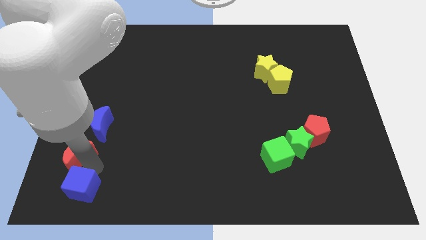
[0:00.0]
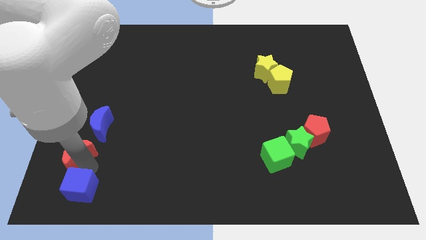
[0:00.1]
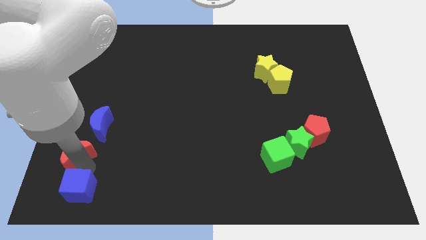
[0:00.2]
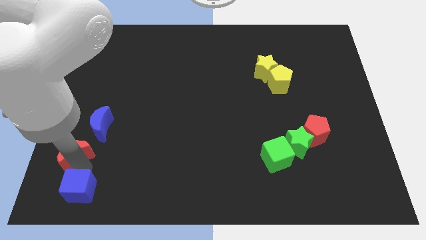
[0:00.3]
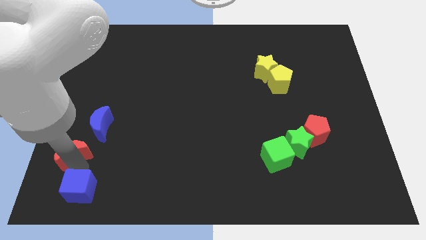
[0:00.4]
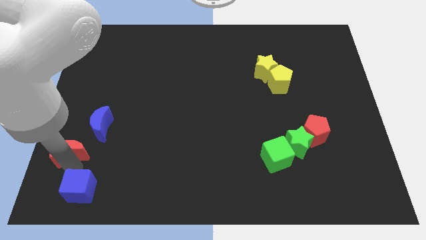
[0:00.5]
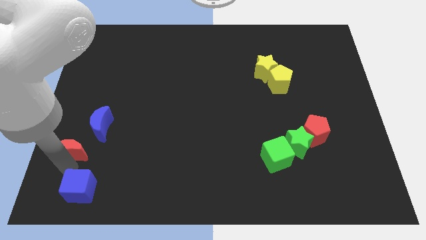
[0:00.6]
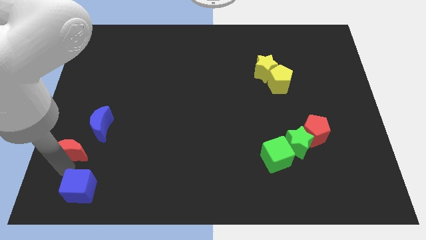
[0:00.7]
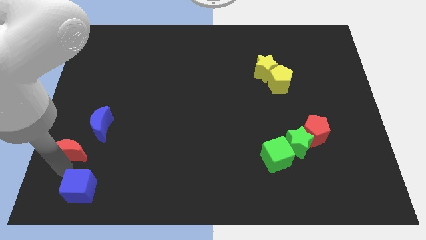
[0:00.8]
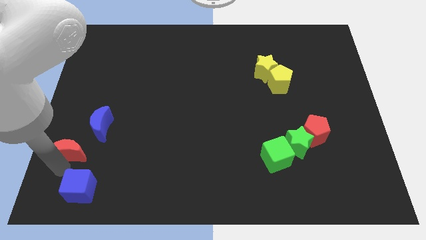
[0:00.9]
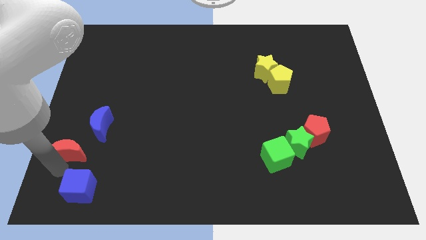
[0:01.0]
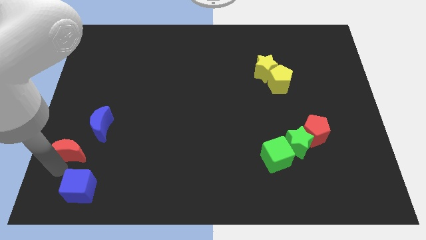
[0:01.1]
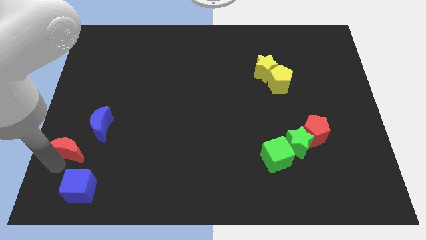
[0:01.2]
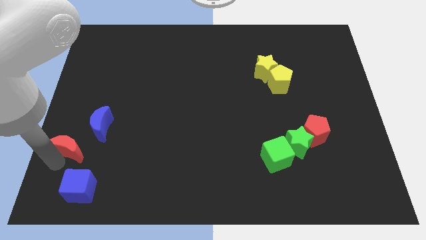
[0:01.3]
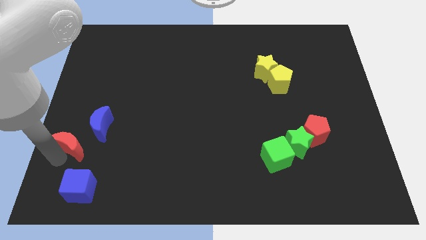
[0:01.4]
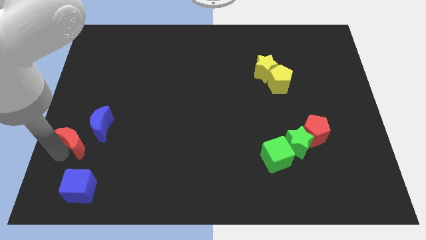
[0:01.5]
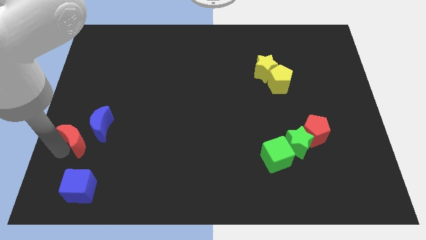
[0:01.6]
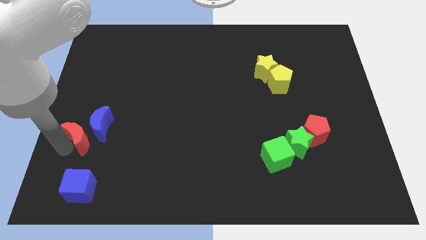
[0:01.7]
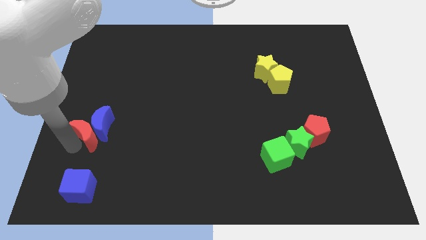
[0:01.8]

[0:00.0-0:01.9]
separate the red crescent from blue cube

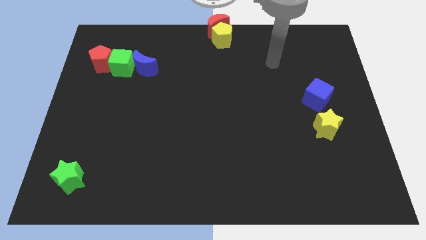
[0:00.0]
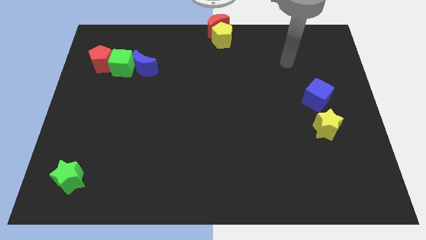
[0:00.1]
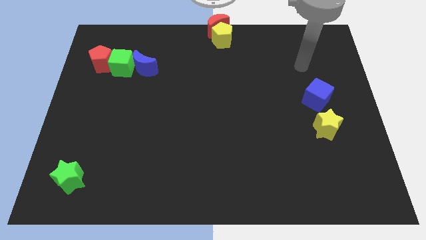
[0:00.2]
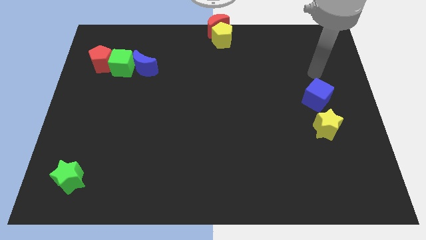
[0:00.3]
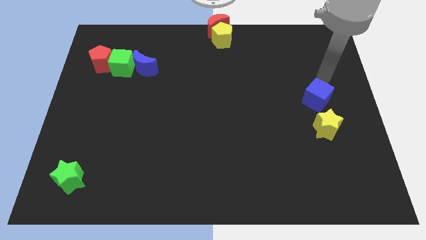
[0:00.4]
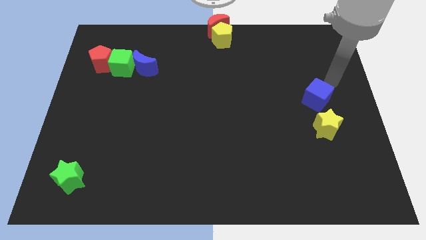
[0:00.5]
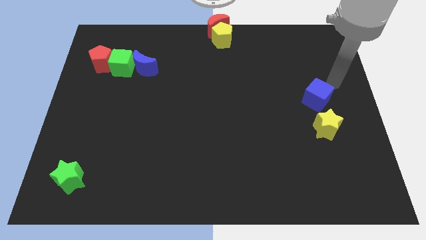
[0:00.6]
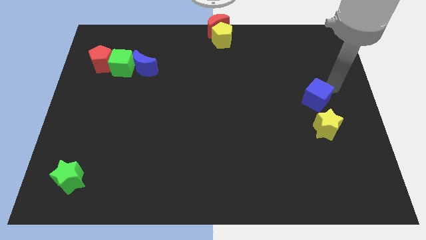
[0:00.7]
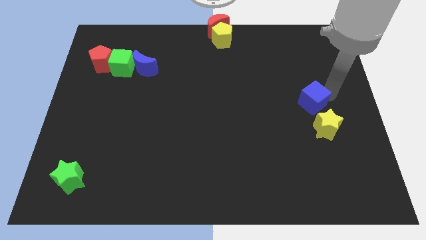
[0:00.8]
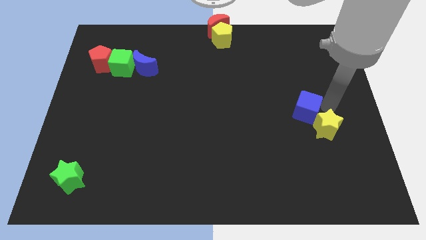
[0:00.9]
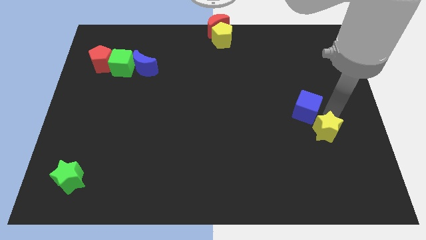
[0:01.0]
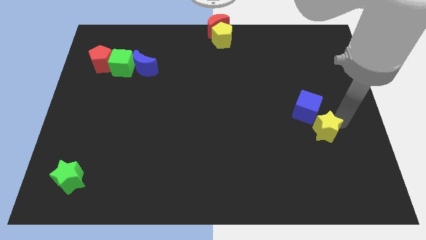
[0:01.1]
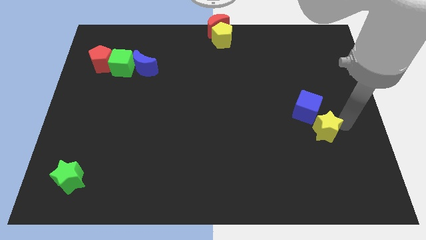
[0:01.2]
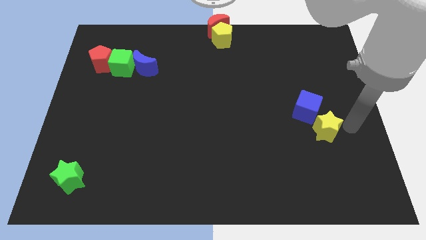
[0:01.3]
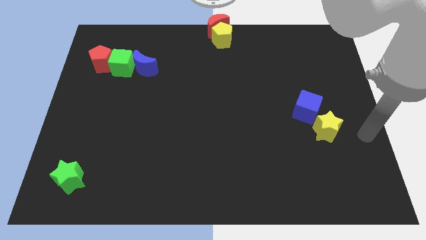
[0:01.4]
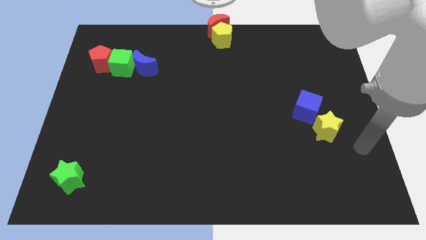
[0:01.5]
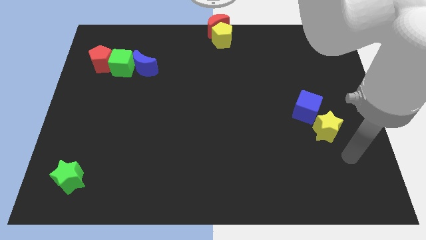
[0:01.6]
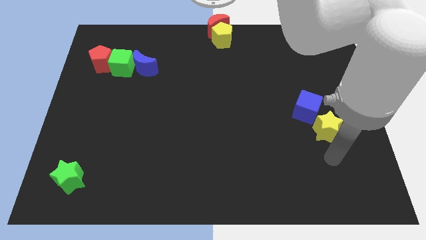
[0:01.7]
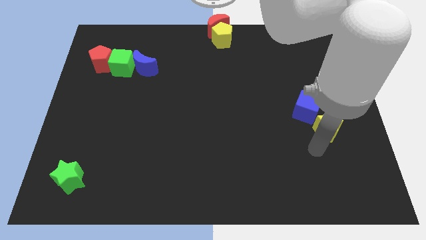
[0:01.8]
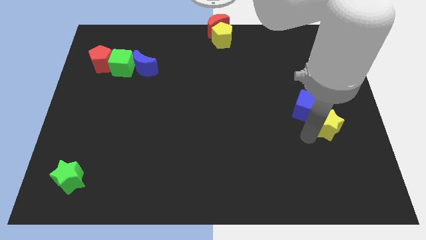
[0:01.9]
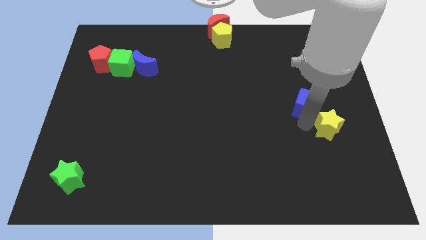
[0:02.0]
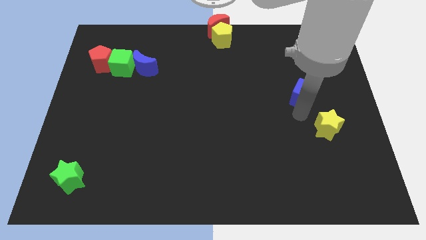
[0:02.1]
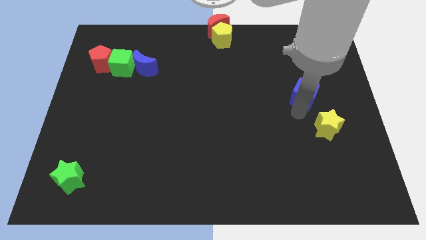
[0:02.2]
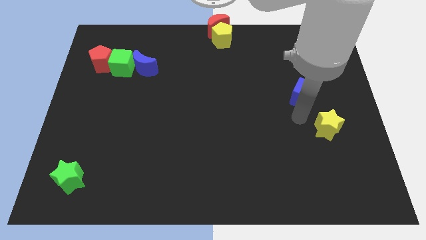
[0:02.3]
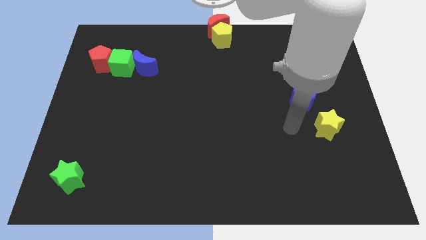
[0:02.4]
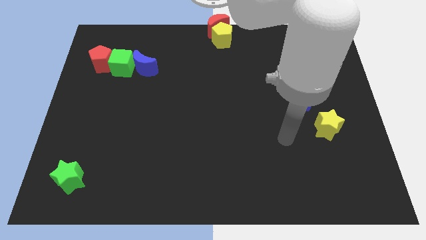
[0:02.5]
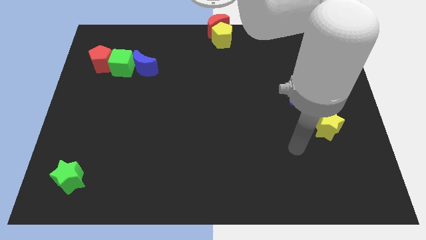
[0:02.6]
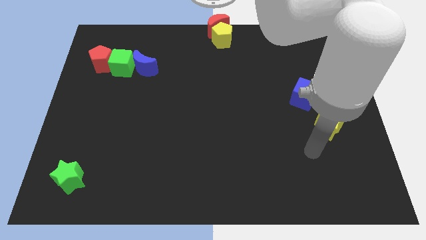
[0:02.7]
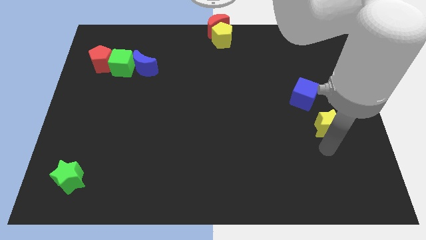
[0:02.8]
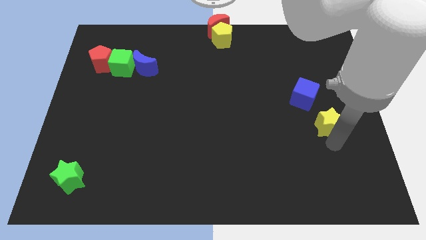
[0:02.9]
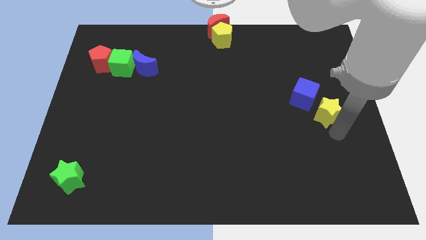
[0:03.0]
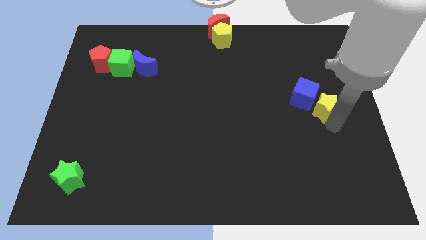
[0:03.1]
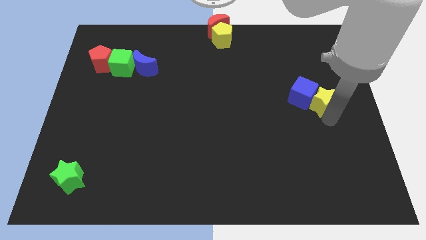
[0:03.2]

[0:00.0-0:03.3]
move the blue cube slightly into the yellow star

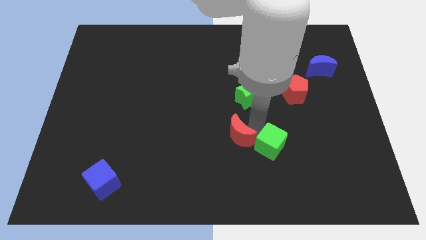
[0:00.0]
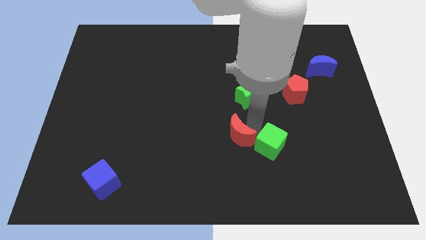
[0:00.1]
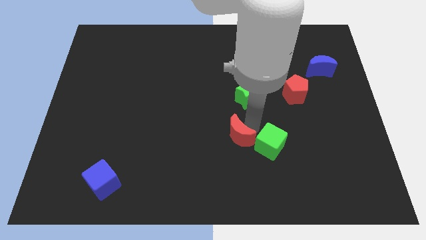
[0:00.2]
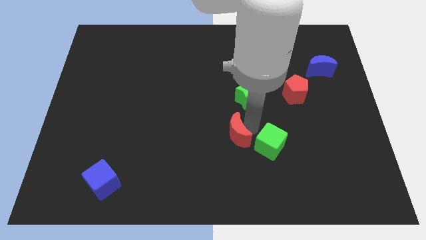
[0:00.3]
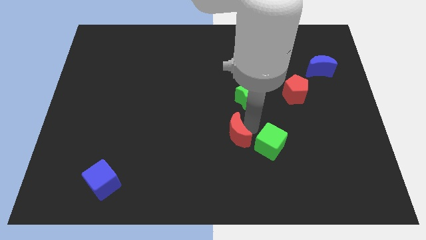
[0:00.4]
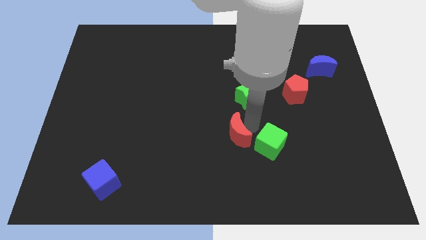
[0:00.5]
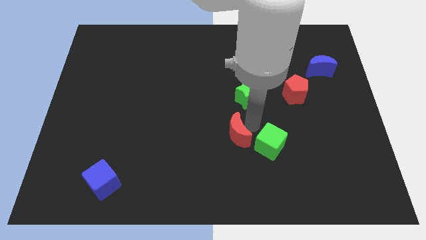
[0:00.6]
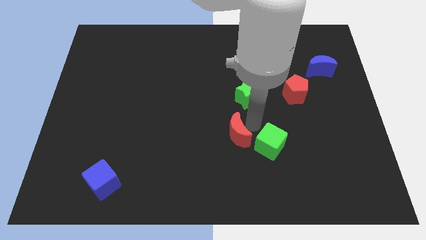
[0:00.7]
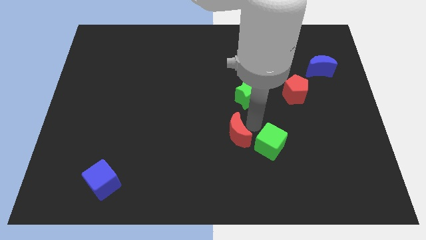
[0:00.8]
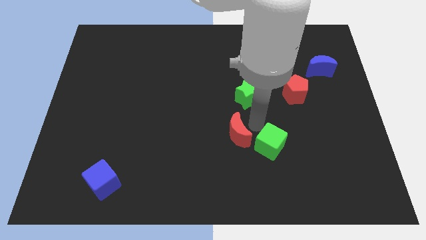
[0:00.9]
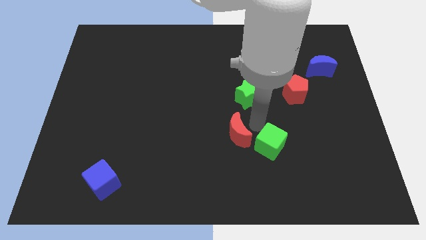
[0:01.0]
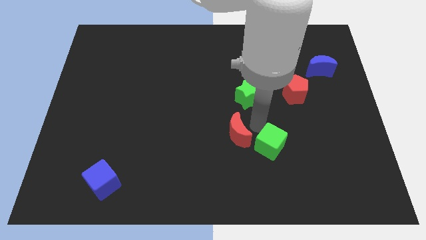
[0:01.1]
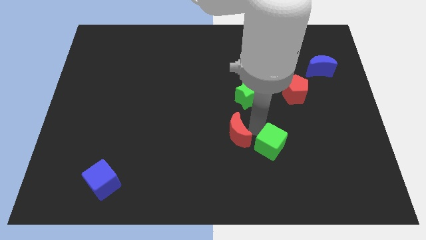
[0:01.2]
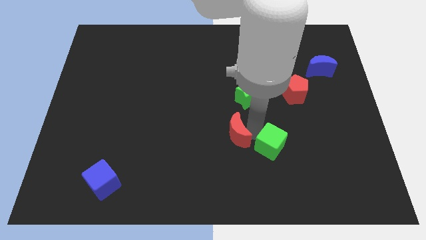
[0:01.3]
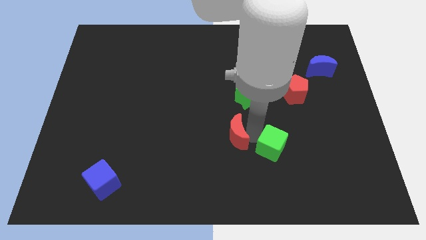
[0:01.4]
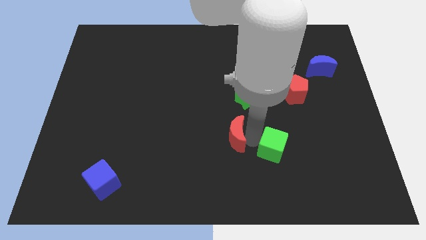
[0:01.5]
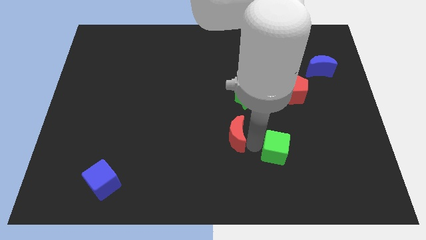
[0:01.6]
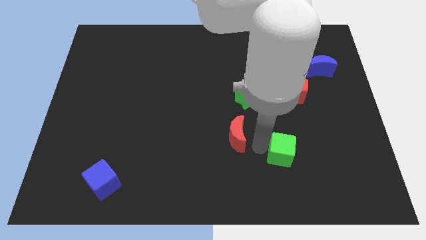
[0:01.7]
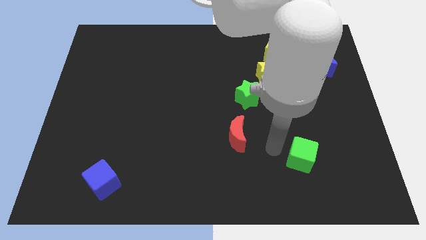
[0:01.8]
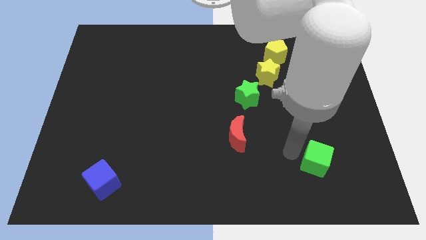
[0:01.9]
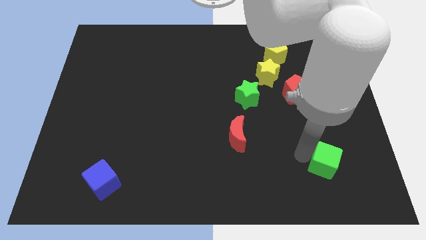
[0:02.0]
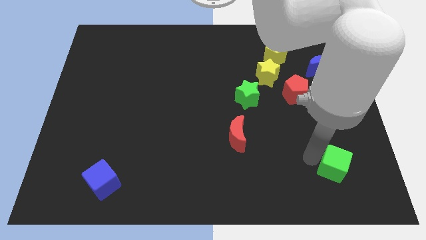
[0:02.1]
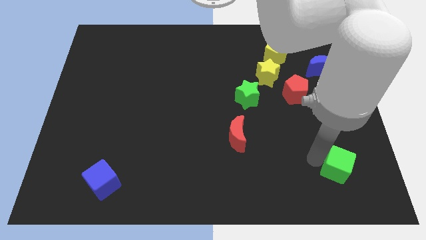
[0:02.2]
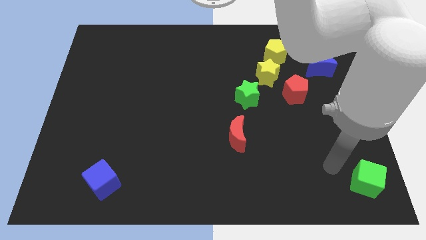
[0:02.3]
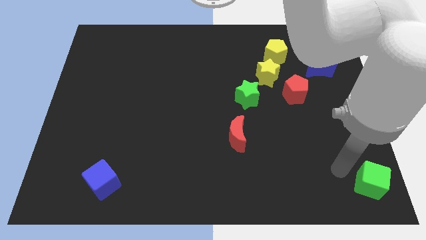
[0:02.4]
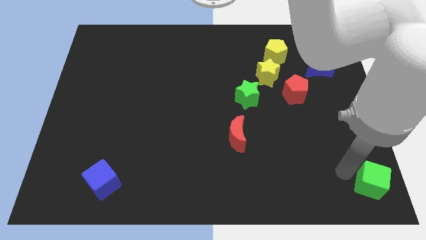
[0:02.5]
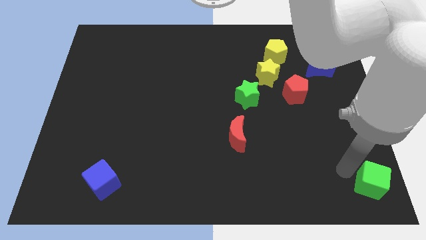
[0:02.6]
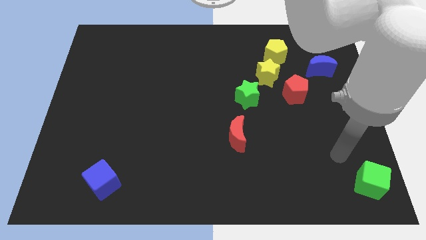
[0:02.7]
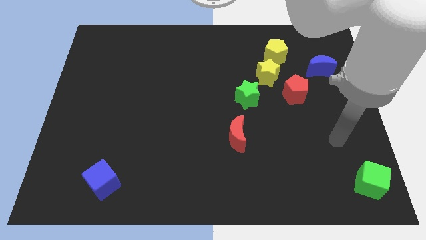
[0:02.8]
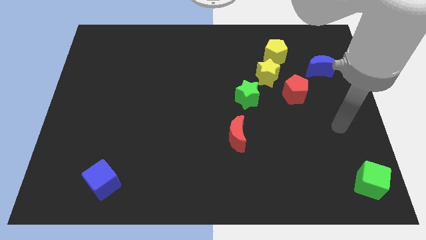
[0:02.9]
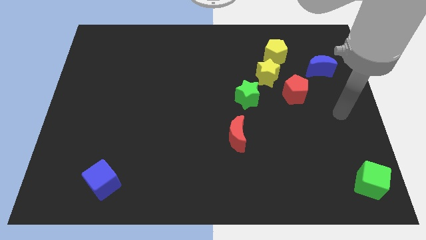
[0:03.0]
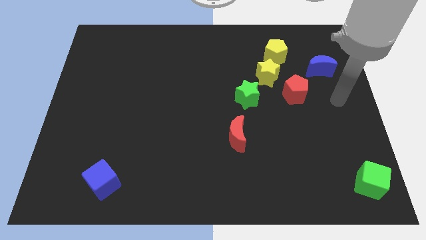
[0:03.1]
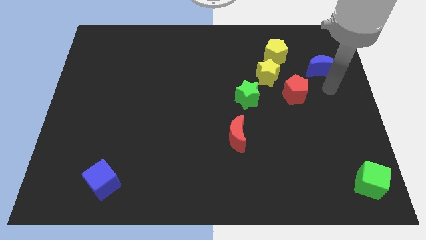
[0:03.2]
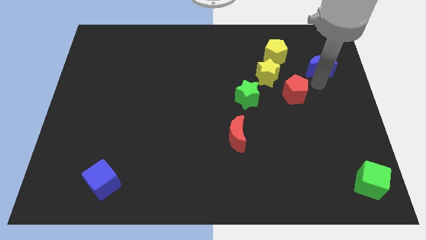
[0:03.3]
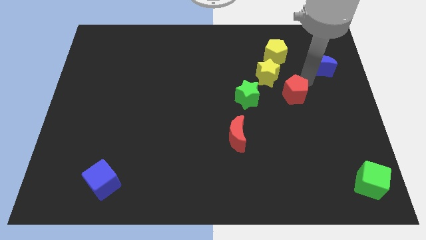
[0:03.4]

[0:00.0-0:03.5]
move the green cube to the bottom right on the board
